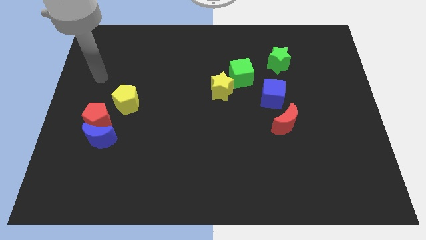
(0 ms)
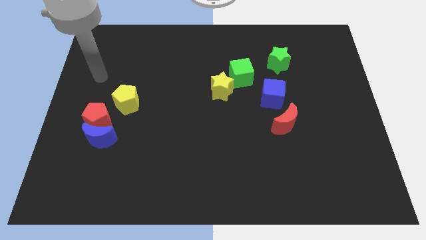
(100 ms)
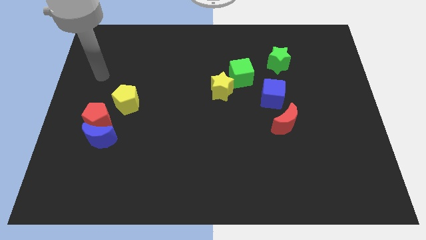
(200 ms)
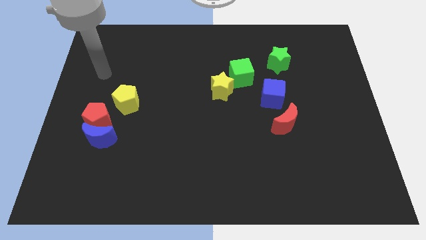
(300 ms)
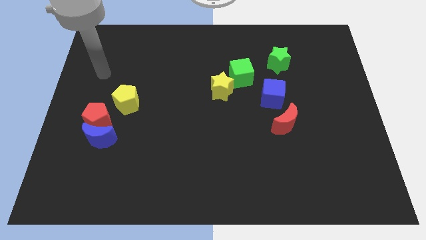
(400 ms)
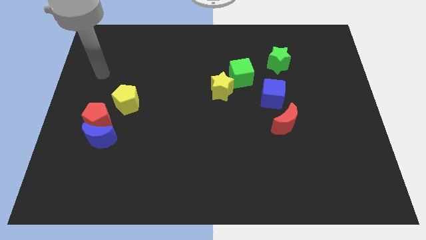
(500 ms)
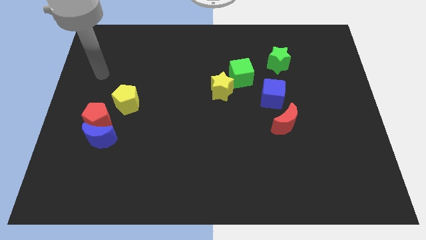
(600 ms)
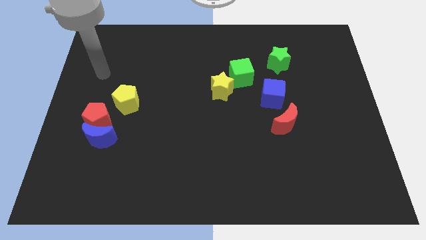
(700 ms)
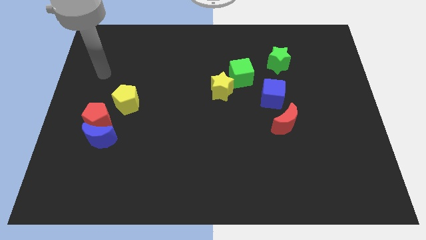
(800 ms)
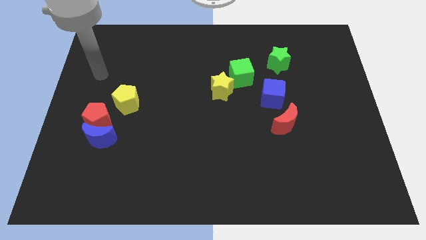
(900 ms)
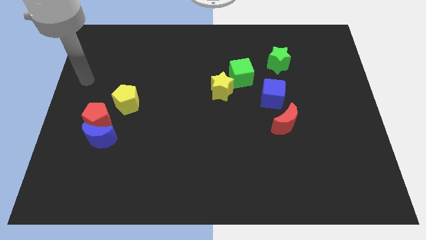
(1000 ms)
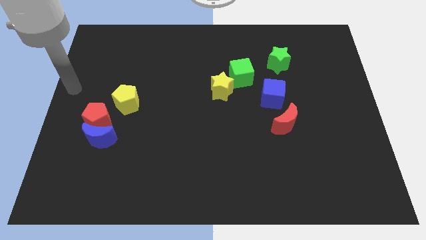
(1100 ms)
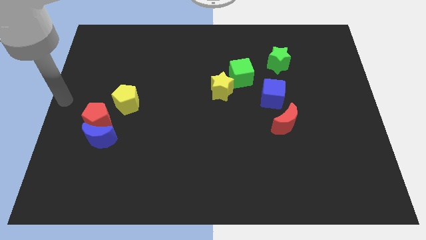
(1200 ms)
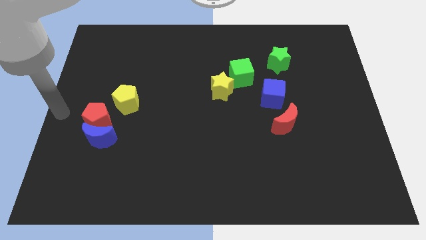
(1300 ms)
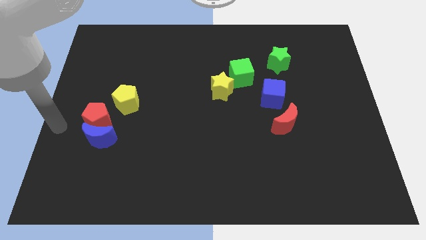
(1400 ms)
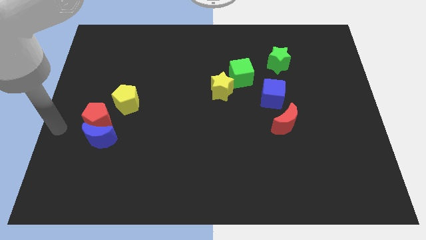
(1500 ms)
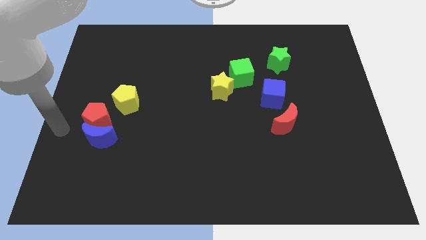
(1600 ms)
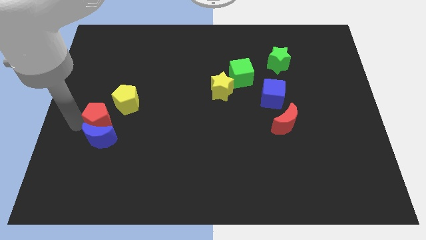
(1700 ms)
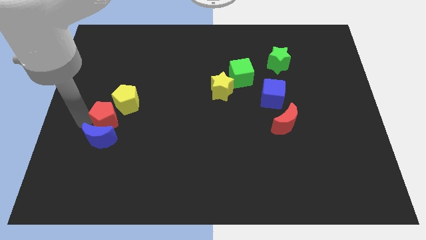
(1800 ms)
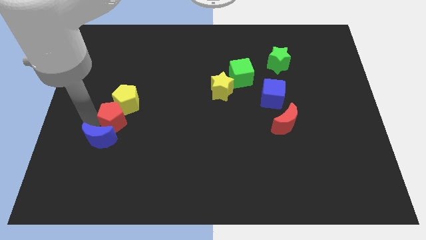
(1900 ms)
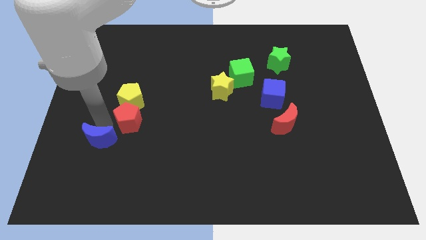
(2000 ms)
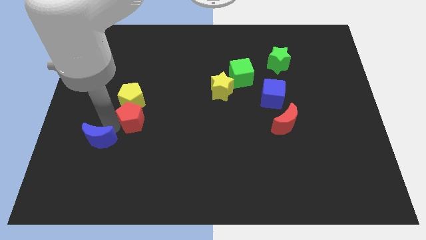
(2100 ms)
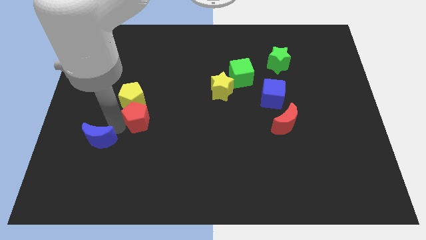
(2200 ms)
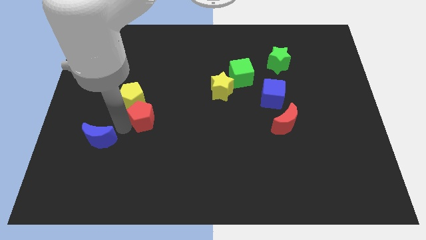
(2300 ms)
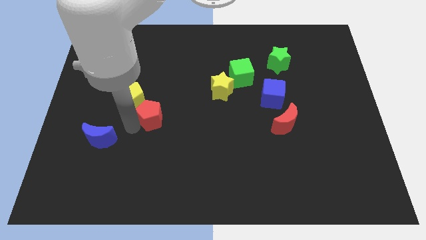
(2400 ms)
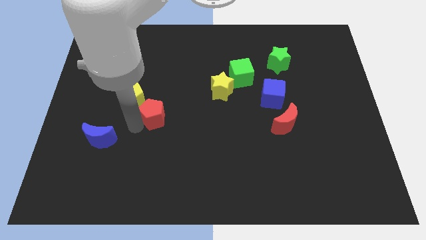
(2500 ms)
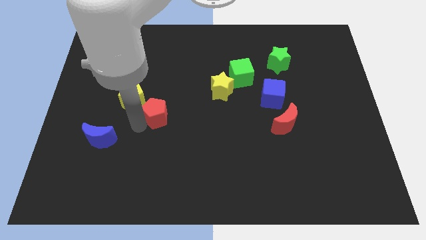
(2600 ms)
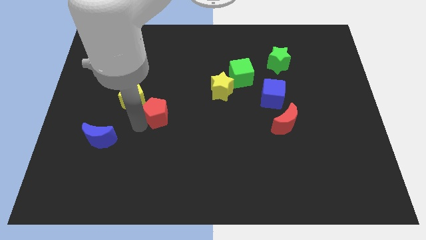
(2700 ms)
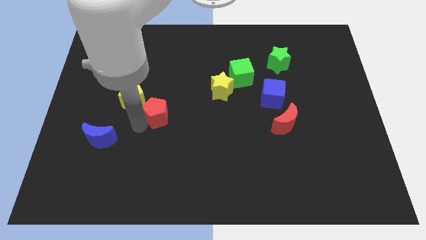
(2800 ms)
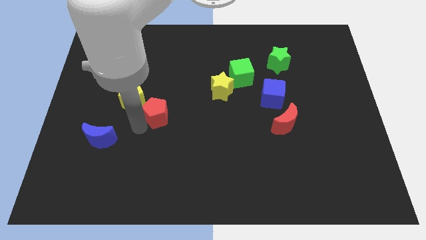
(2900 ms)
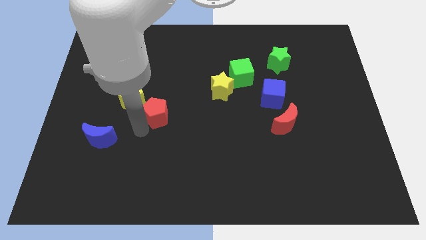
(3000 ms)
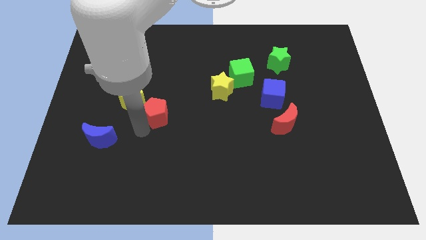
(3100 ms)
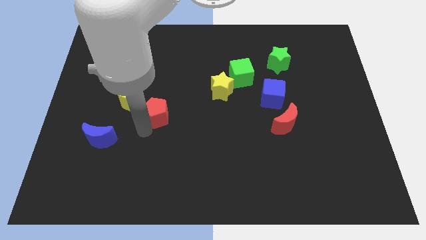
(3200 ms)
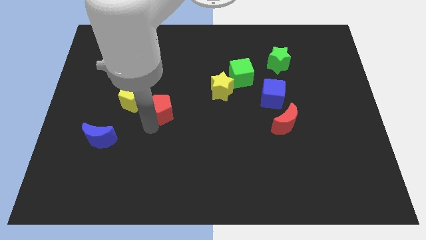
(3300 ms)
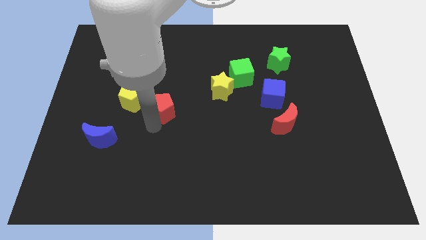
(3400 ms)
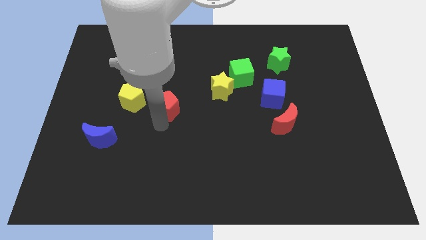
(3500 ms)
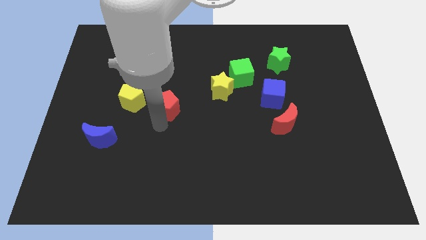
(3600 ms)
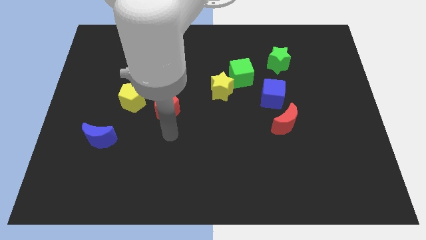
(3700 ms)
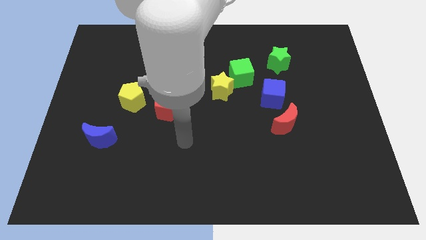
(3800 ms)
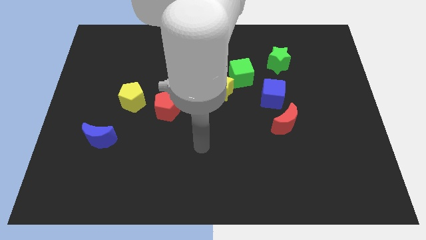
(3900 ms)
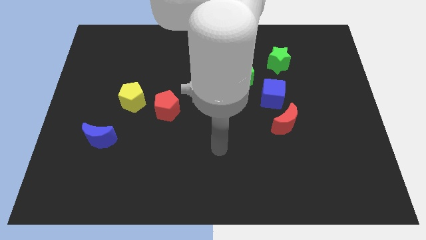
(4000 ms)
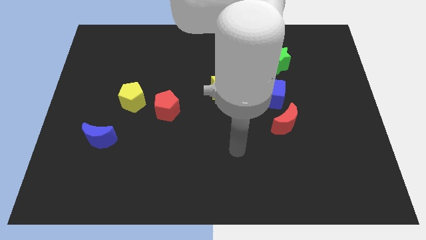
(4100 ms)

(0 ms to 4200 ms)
separate the red pentagon from the yellow pentagon

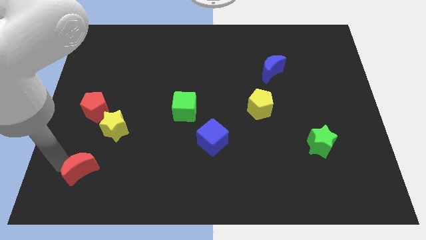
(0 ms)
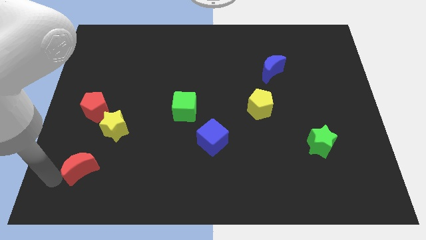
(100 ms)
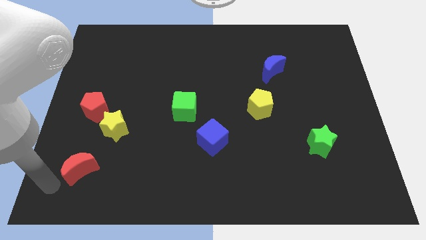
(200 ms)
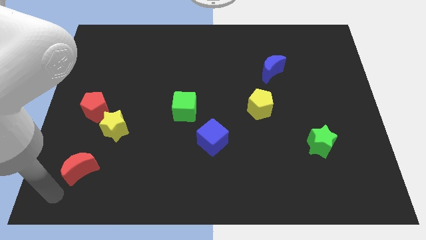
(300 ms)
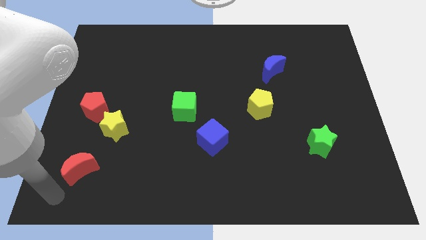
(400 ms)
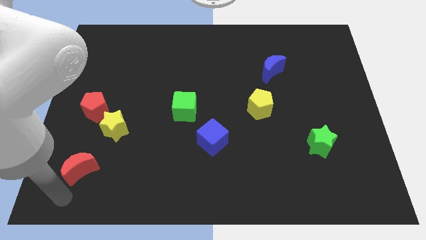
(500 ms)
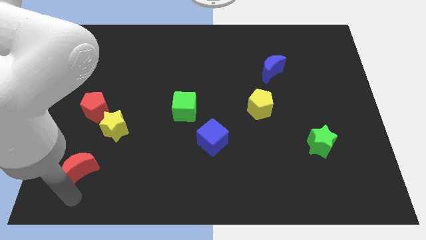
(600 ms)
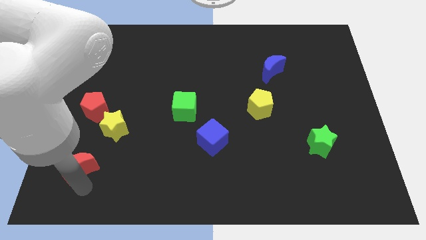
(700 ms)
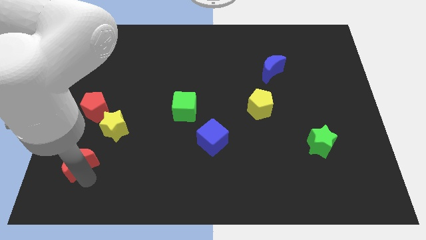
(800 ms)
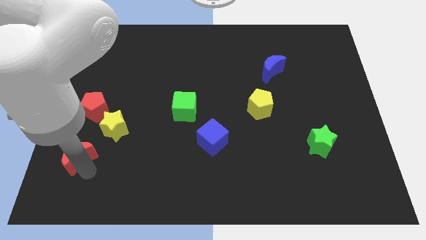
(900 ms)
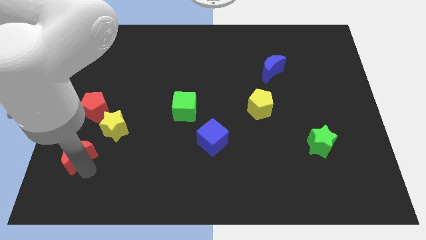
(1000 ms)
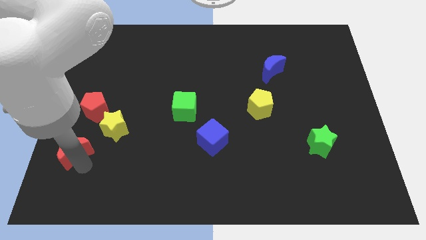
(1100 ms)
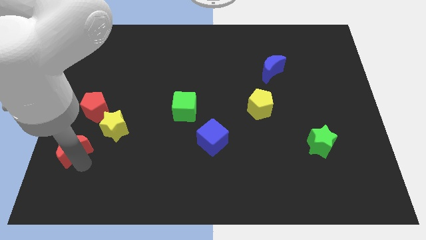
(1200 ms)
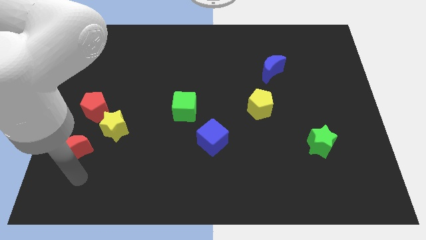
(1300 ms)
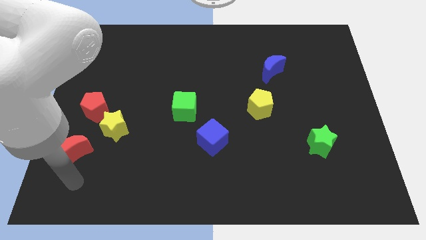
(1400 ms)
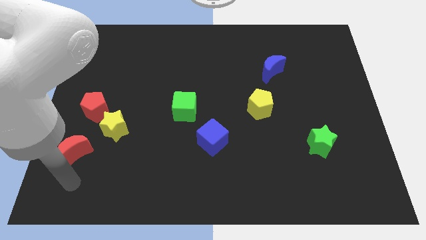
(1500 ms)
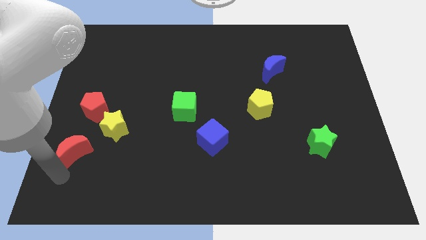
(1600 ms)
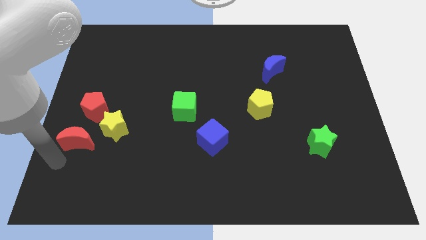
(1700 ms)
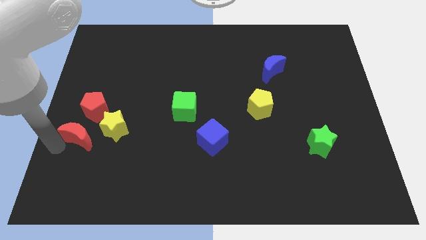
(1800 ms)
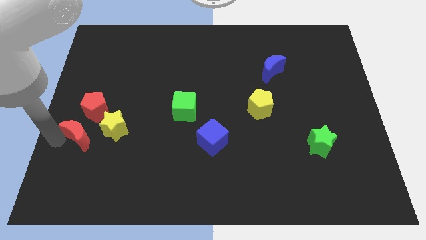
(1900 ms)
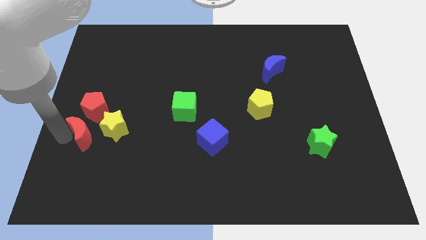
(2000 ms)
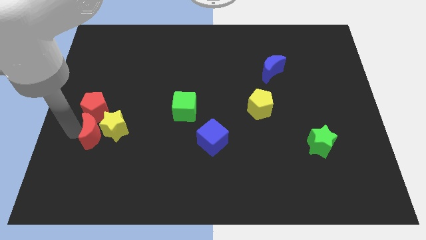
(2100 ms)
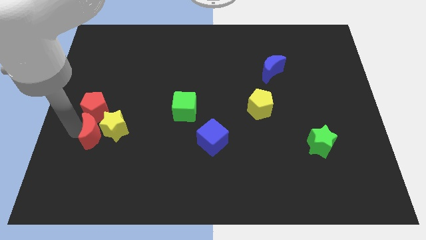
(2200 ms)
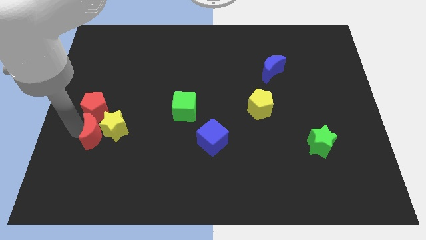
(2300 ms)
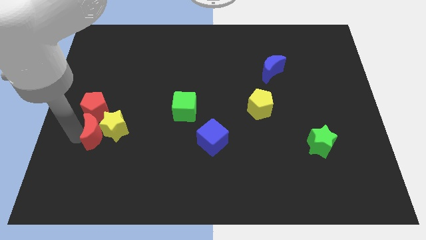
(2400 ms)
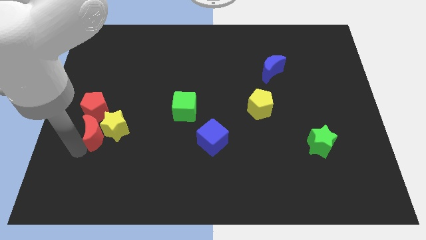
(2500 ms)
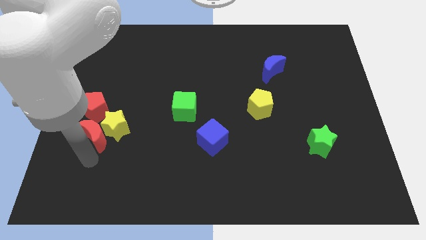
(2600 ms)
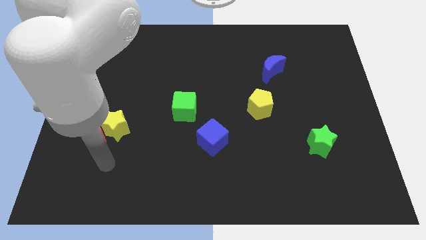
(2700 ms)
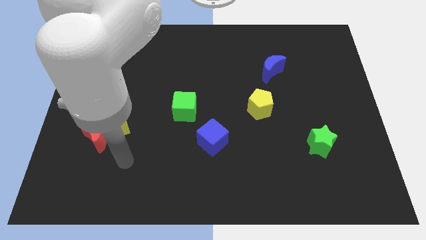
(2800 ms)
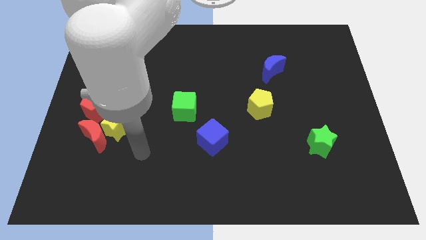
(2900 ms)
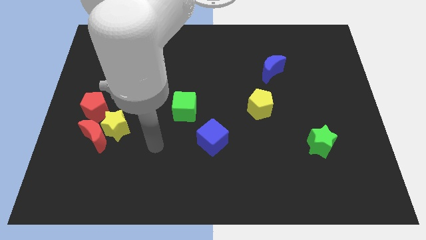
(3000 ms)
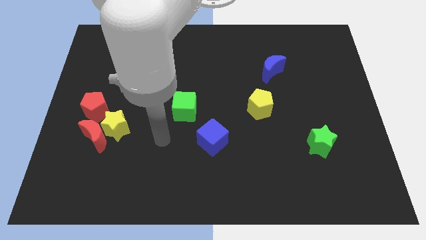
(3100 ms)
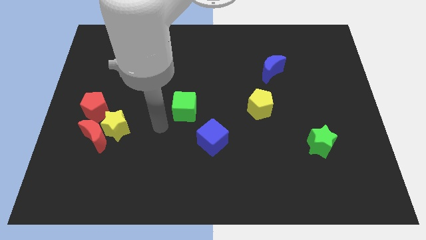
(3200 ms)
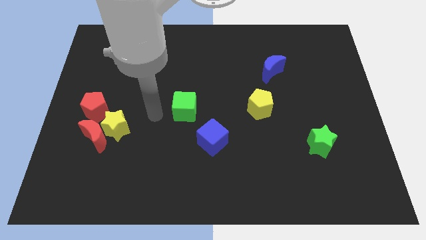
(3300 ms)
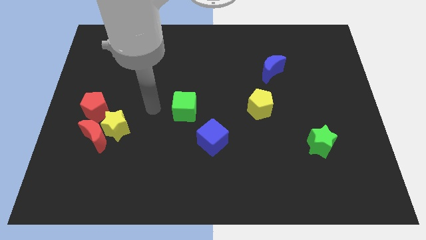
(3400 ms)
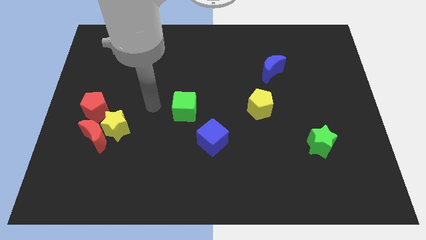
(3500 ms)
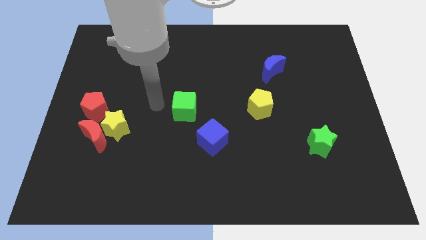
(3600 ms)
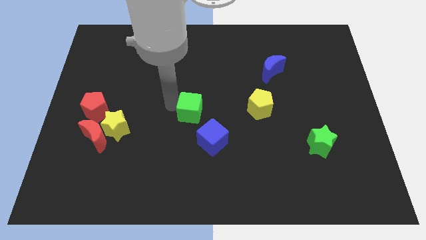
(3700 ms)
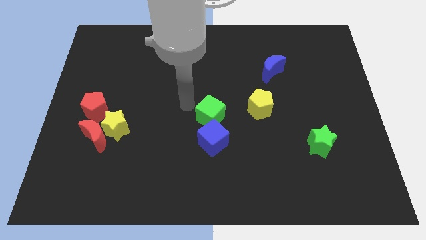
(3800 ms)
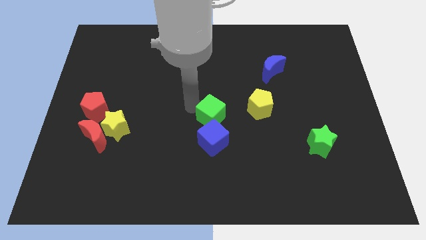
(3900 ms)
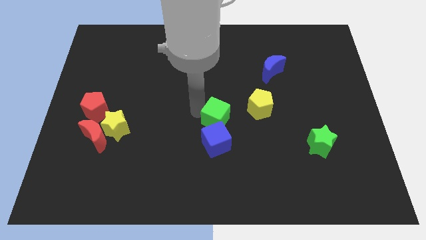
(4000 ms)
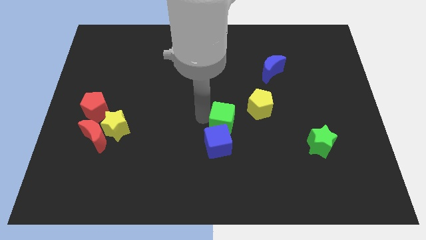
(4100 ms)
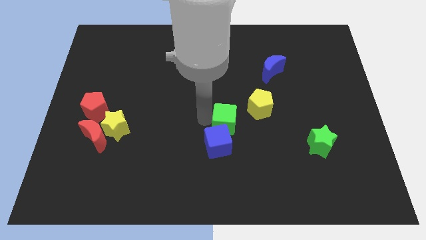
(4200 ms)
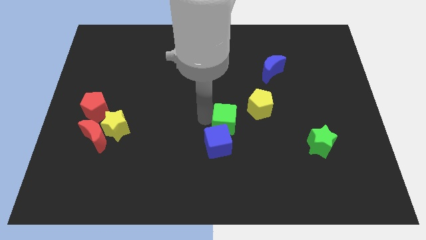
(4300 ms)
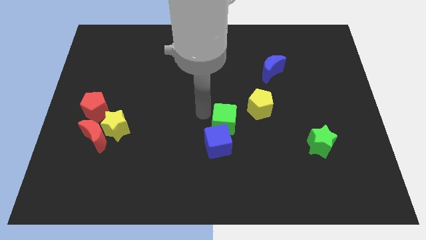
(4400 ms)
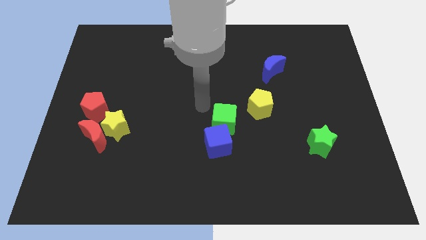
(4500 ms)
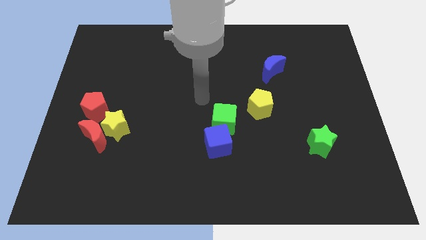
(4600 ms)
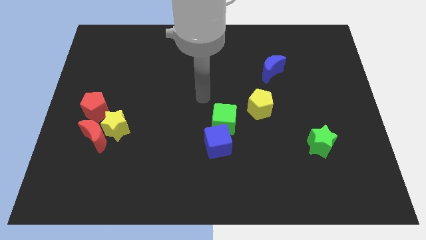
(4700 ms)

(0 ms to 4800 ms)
slide the red crescent into the yellow star
